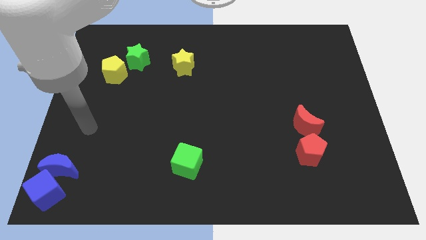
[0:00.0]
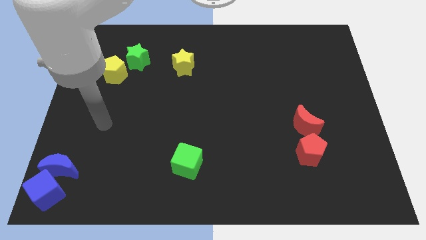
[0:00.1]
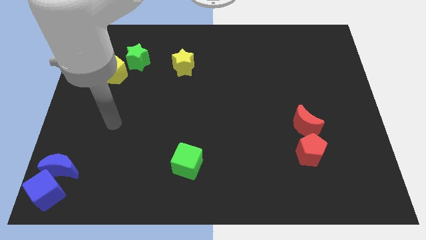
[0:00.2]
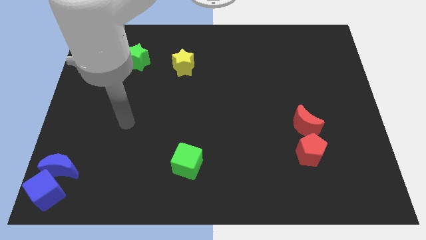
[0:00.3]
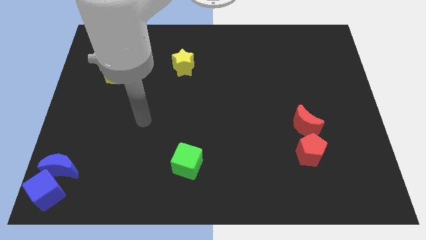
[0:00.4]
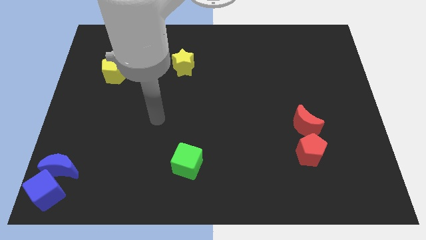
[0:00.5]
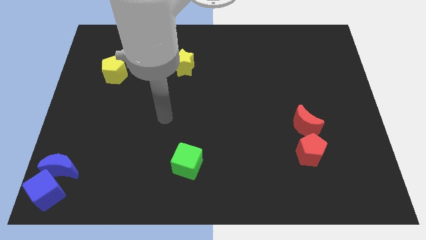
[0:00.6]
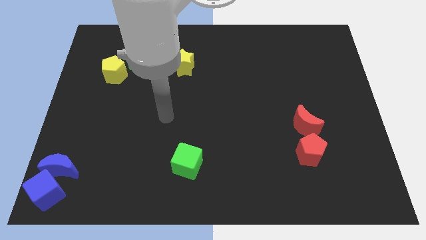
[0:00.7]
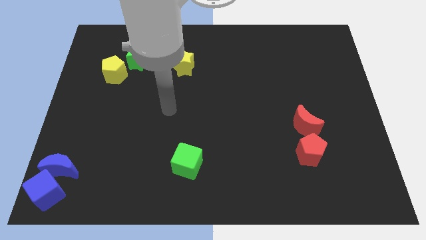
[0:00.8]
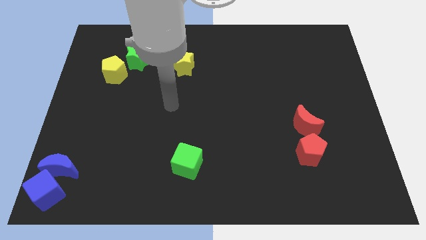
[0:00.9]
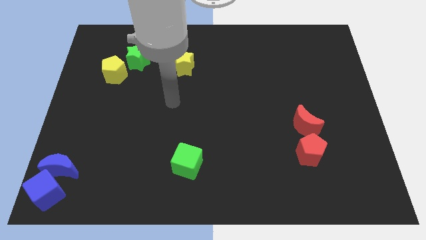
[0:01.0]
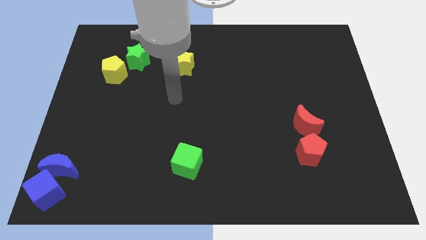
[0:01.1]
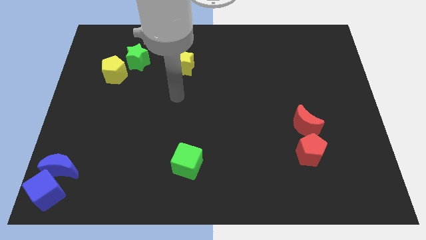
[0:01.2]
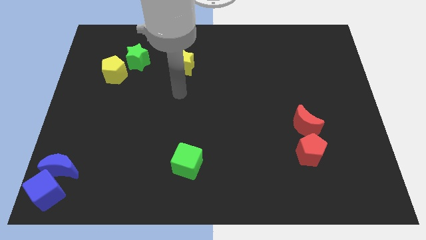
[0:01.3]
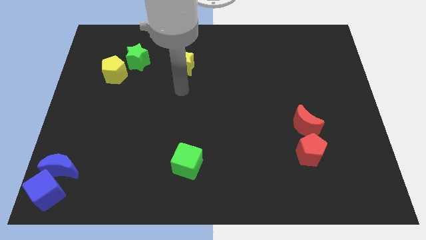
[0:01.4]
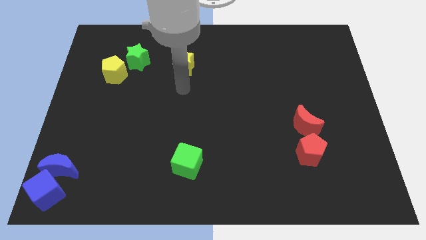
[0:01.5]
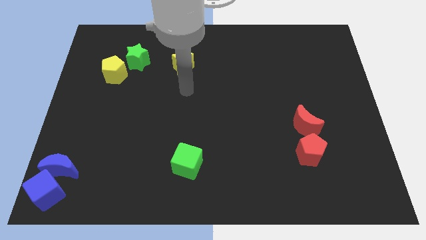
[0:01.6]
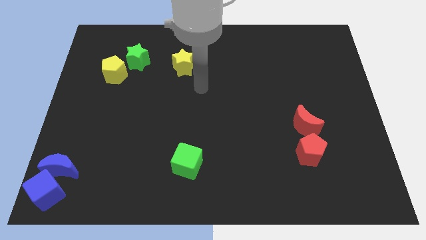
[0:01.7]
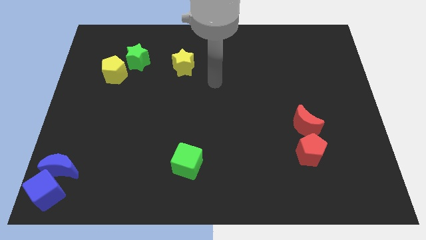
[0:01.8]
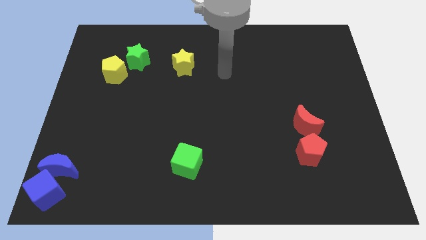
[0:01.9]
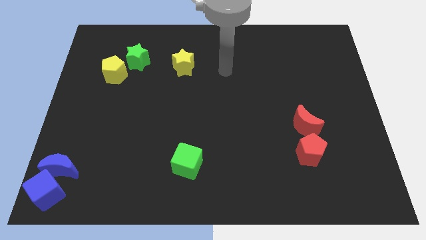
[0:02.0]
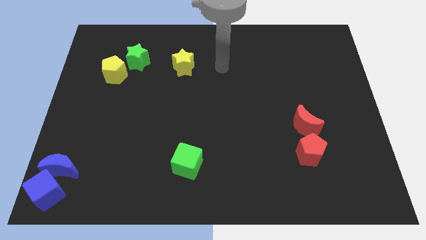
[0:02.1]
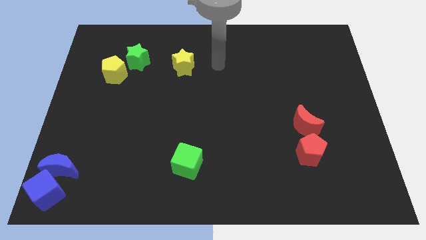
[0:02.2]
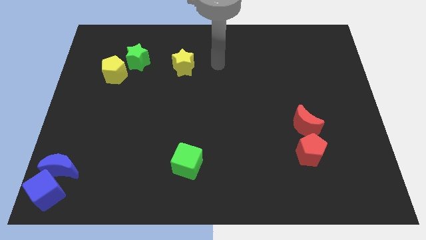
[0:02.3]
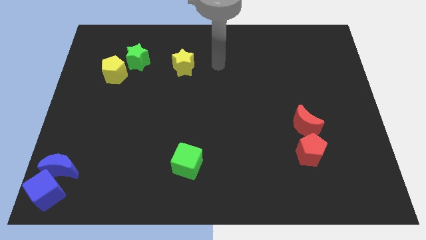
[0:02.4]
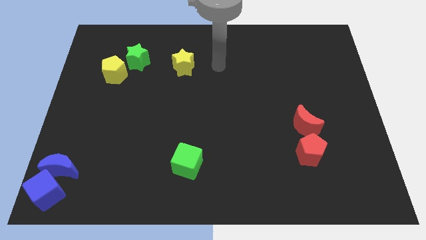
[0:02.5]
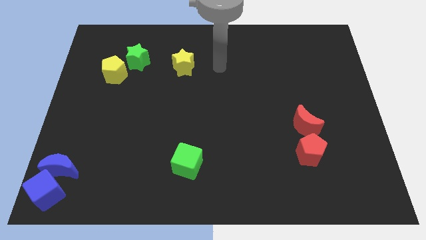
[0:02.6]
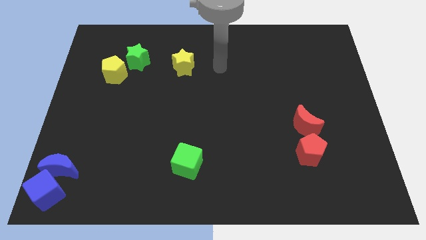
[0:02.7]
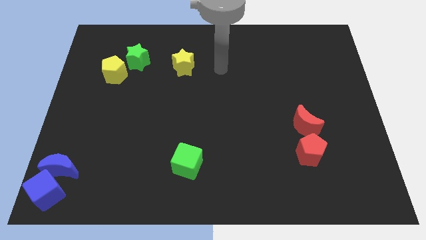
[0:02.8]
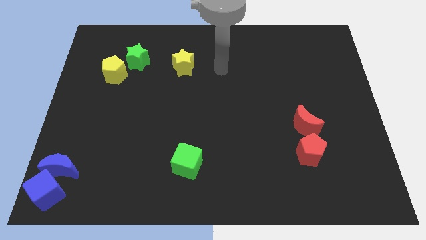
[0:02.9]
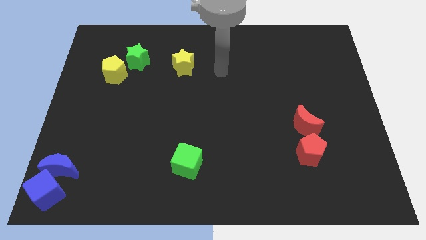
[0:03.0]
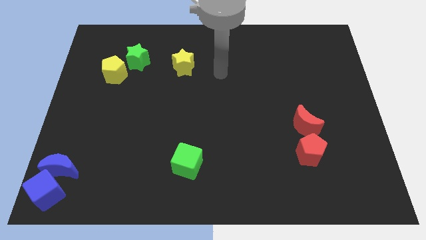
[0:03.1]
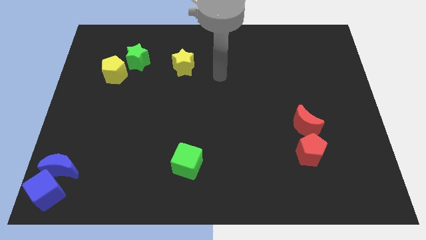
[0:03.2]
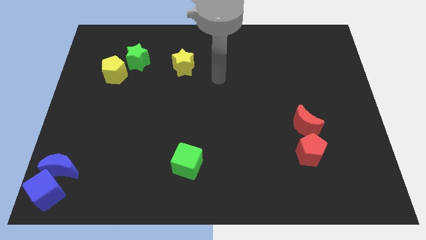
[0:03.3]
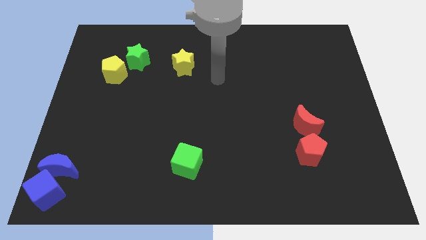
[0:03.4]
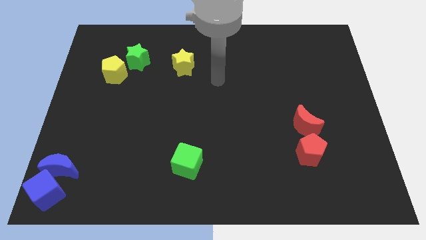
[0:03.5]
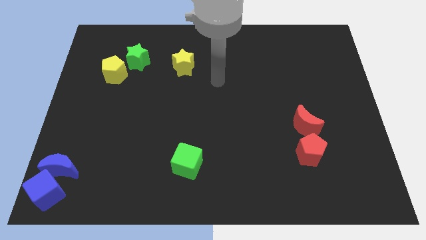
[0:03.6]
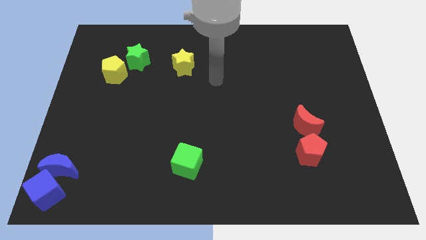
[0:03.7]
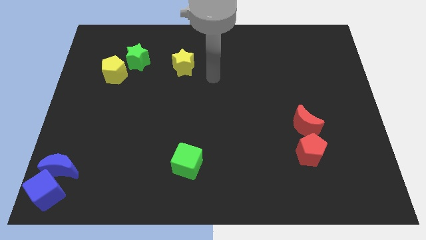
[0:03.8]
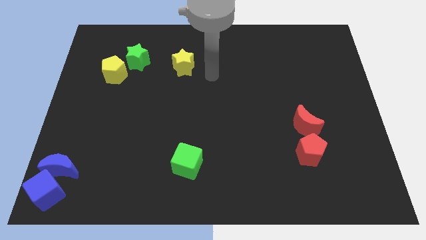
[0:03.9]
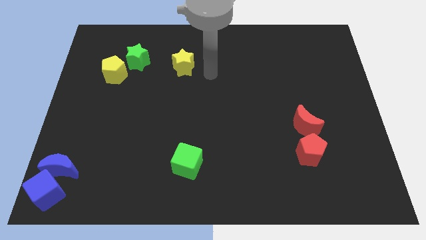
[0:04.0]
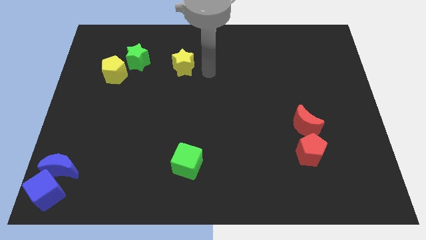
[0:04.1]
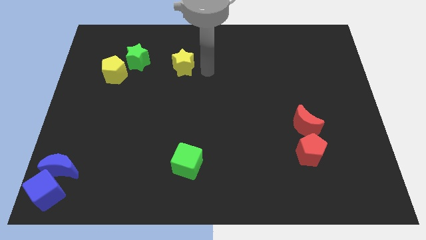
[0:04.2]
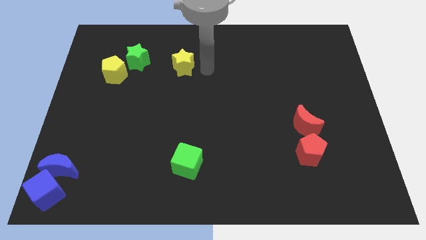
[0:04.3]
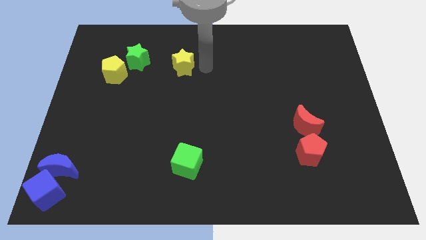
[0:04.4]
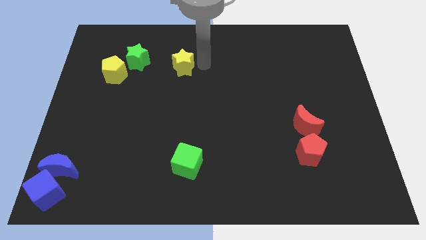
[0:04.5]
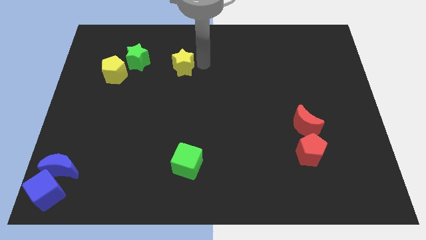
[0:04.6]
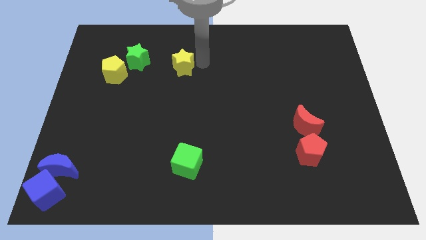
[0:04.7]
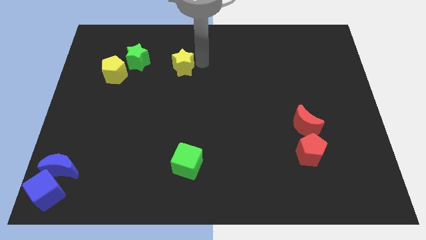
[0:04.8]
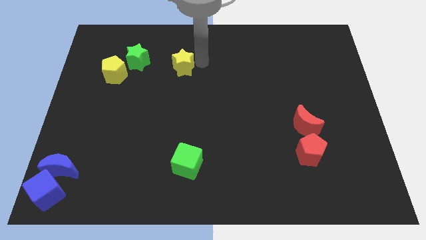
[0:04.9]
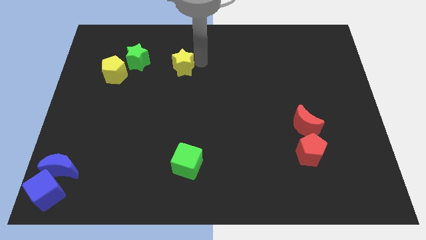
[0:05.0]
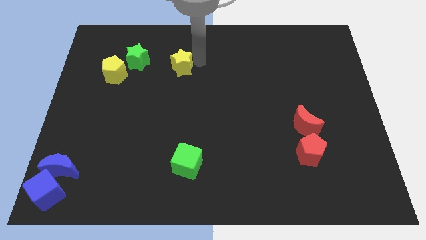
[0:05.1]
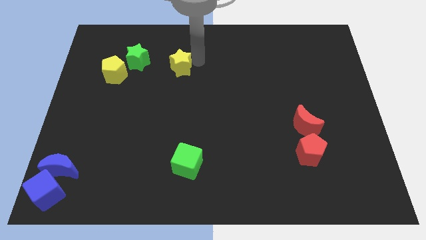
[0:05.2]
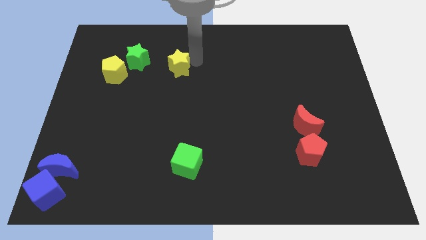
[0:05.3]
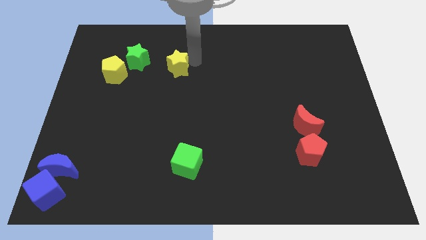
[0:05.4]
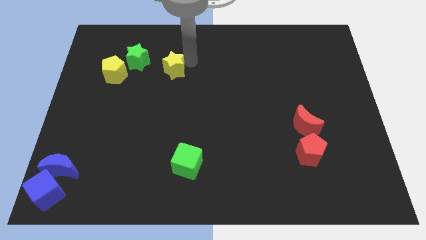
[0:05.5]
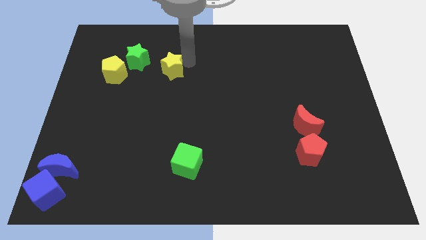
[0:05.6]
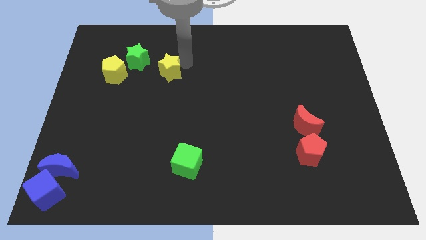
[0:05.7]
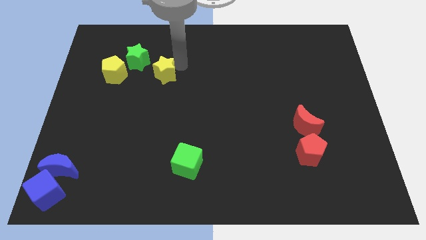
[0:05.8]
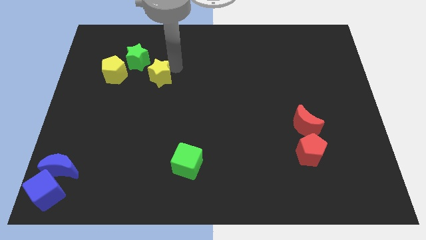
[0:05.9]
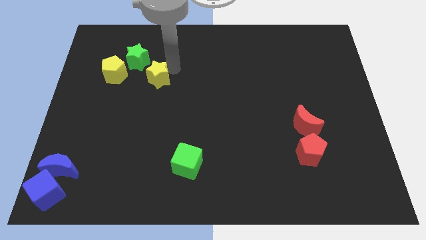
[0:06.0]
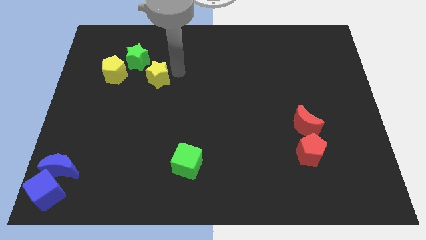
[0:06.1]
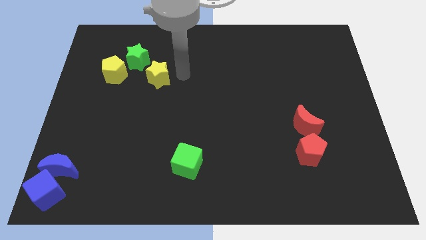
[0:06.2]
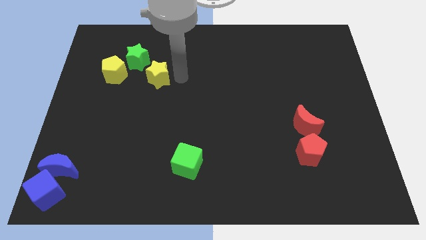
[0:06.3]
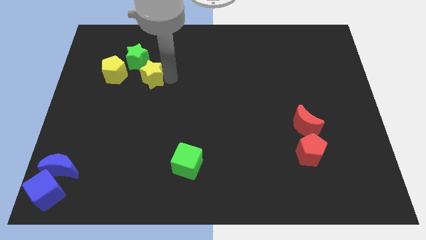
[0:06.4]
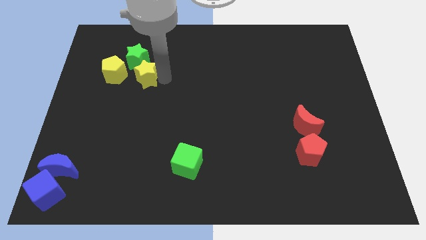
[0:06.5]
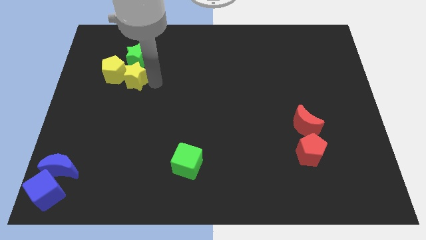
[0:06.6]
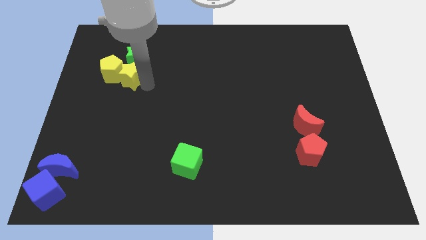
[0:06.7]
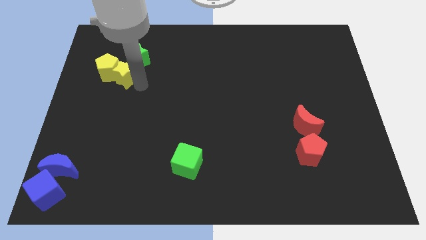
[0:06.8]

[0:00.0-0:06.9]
push the yellow star to the right of the yellow pentagon

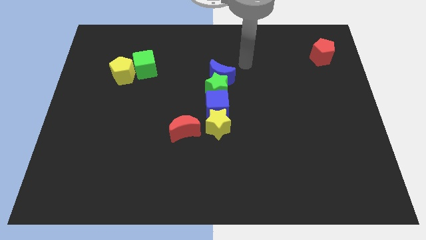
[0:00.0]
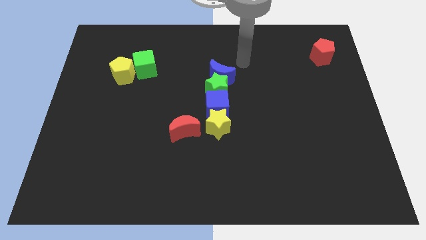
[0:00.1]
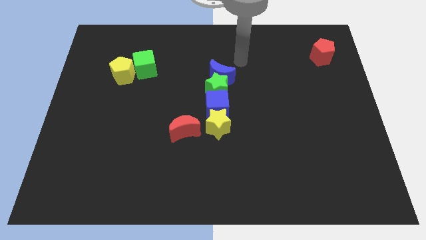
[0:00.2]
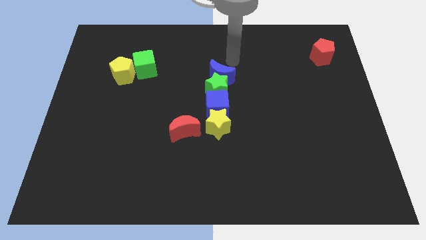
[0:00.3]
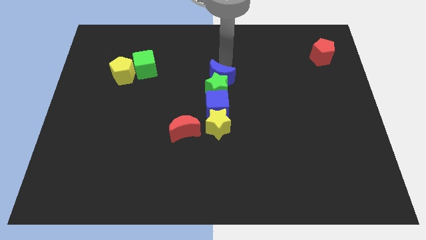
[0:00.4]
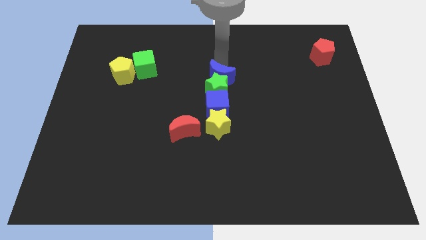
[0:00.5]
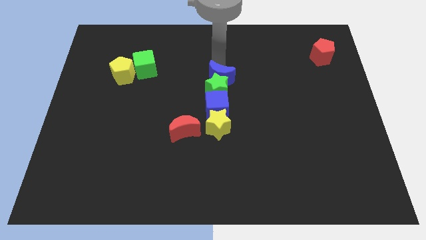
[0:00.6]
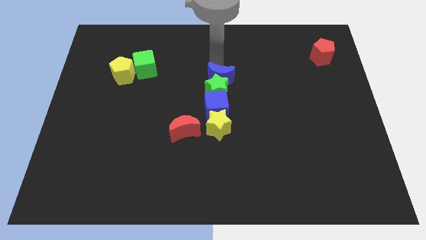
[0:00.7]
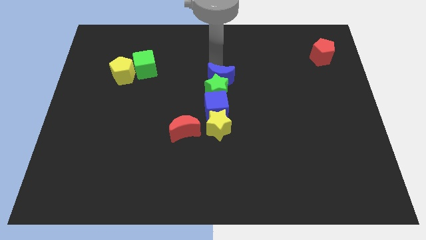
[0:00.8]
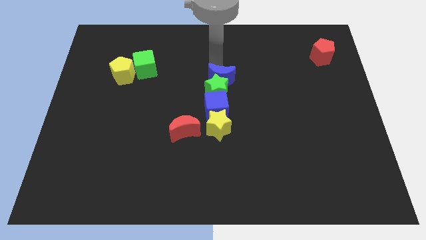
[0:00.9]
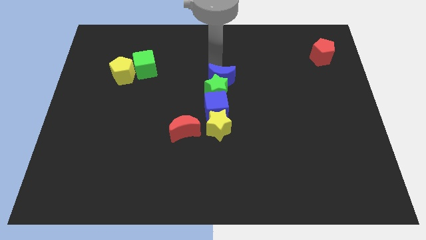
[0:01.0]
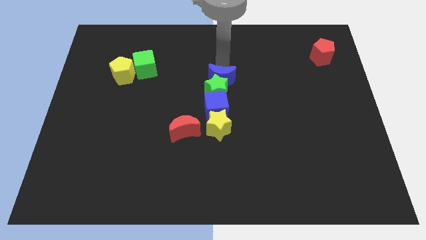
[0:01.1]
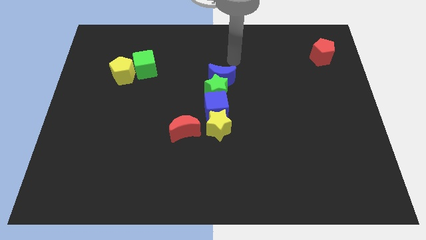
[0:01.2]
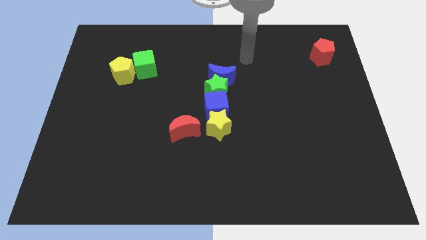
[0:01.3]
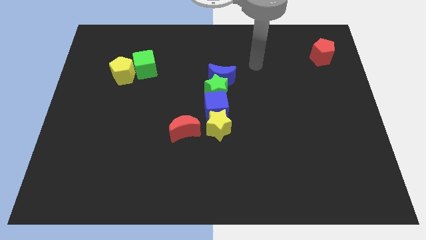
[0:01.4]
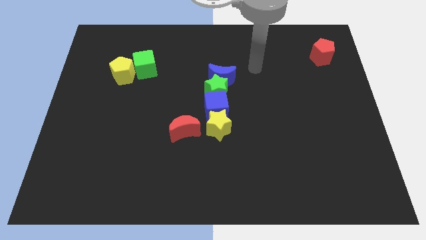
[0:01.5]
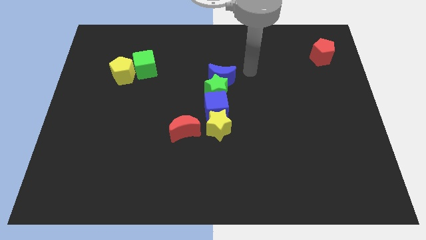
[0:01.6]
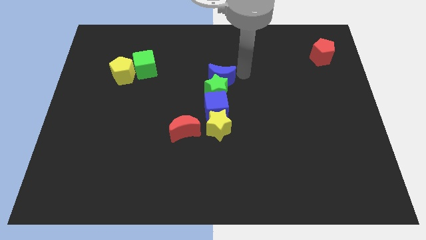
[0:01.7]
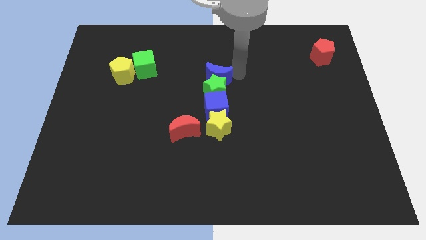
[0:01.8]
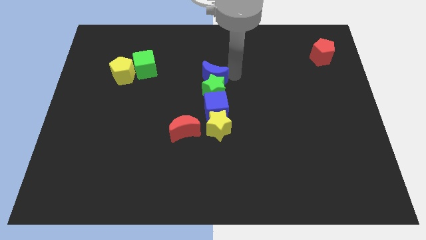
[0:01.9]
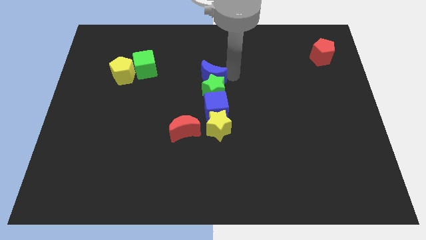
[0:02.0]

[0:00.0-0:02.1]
adjust the blue crescent at the top side of the green star
